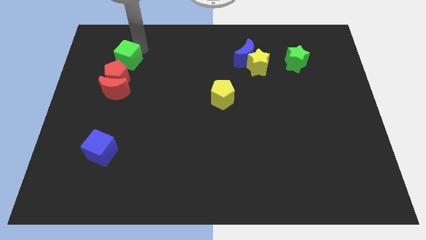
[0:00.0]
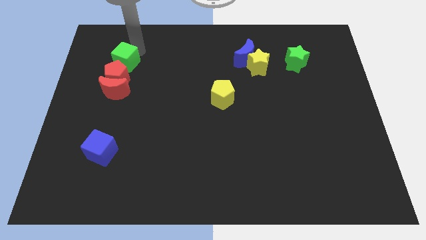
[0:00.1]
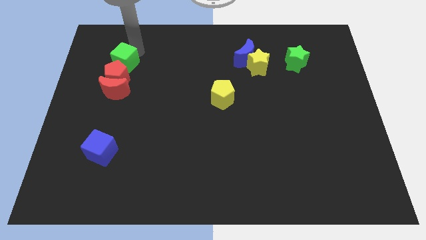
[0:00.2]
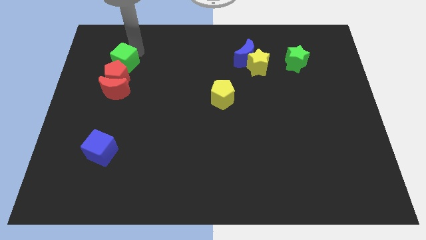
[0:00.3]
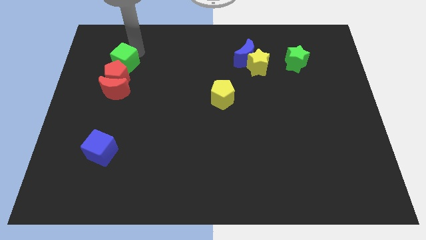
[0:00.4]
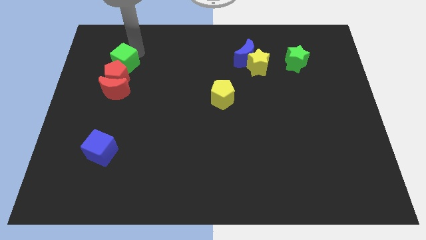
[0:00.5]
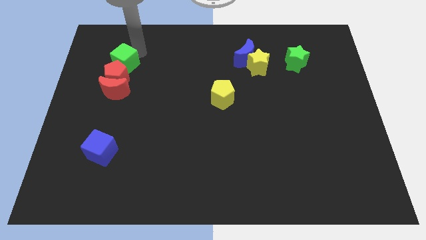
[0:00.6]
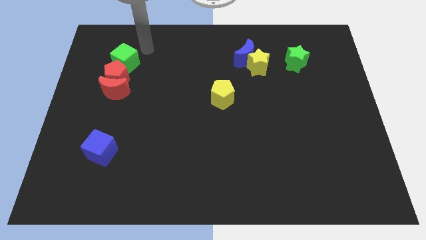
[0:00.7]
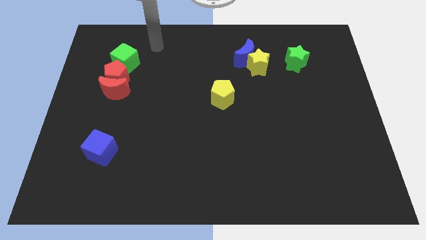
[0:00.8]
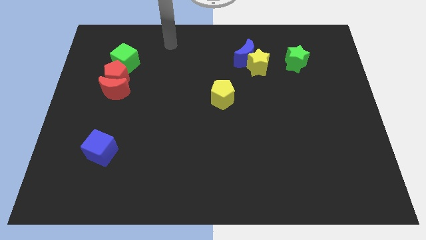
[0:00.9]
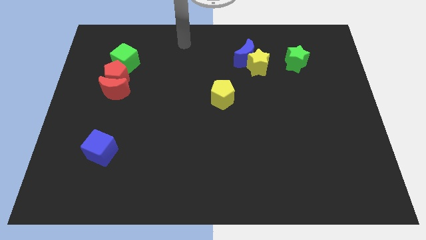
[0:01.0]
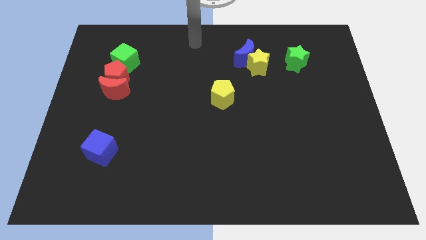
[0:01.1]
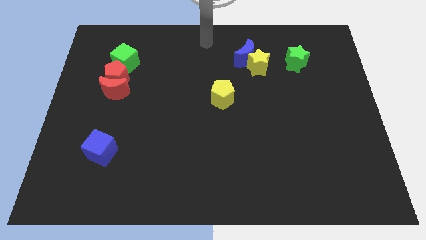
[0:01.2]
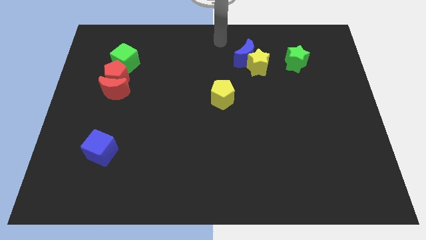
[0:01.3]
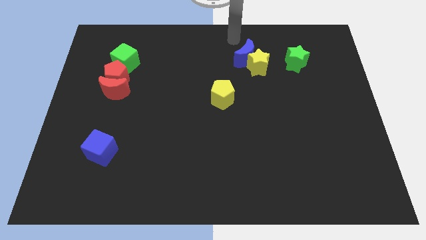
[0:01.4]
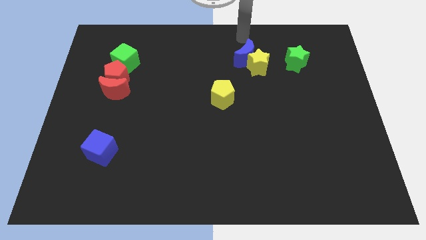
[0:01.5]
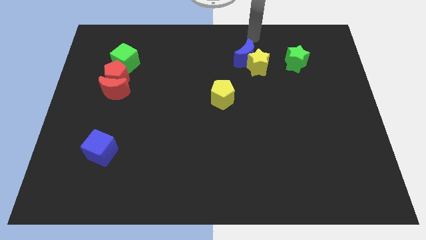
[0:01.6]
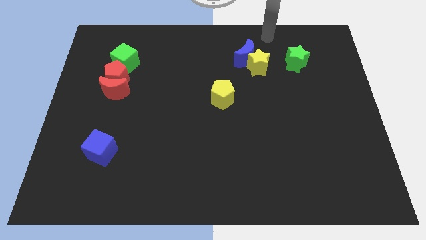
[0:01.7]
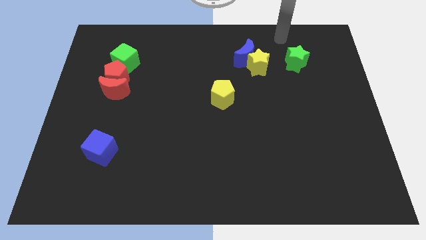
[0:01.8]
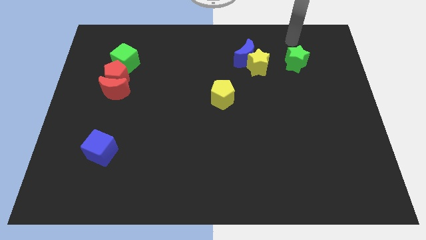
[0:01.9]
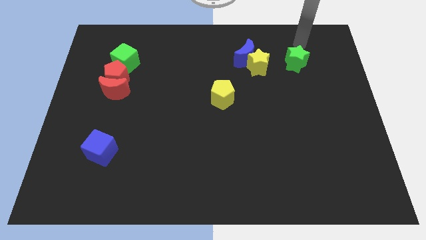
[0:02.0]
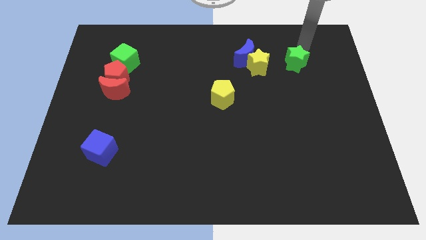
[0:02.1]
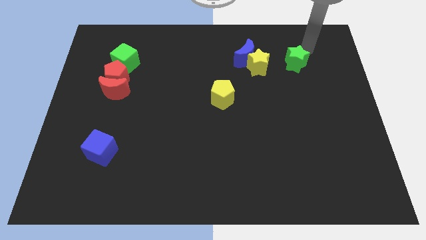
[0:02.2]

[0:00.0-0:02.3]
move your arm to the top of the green star

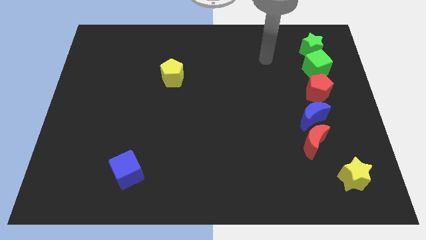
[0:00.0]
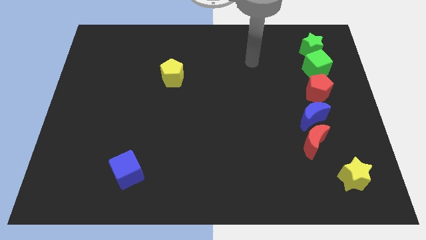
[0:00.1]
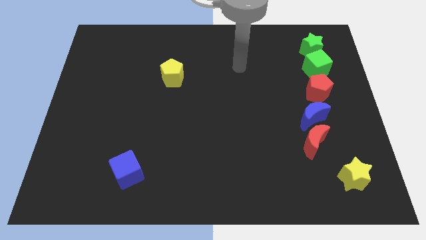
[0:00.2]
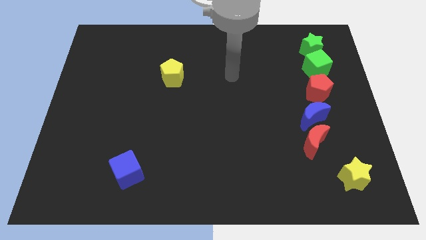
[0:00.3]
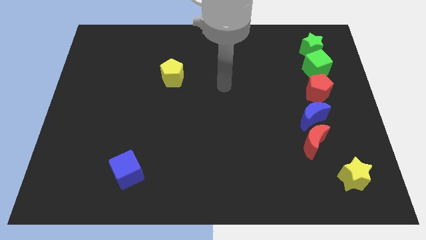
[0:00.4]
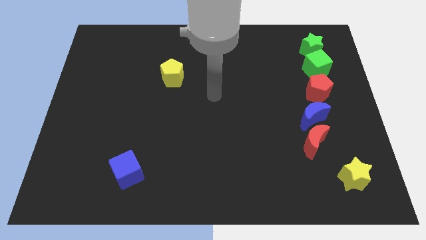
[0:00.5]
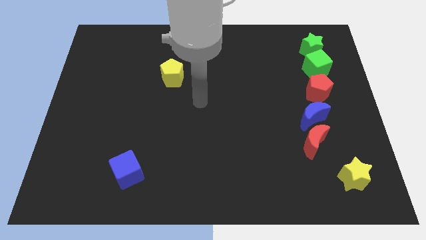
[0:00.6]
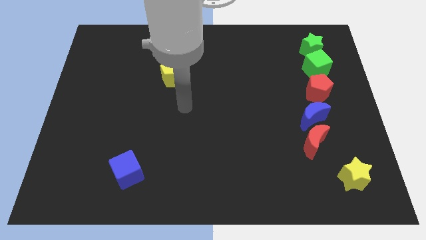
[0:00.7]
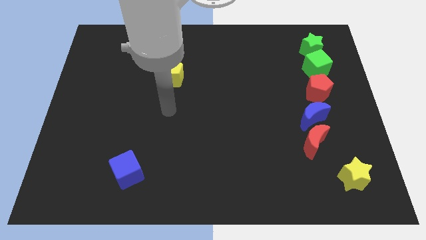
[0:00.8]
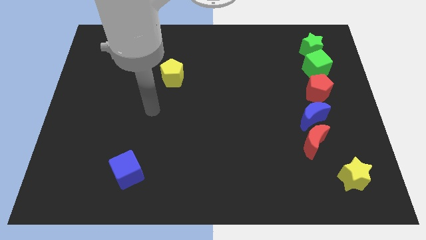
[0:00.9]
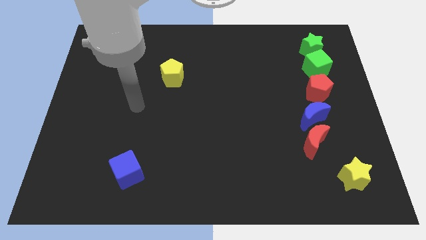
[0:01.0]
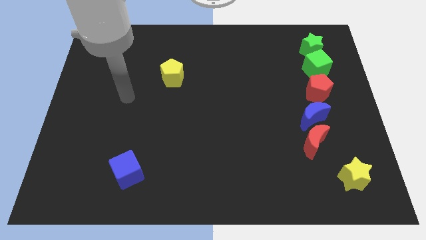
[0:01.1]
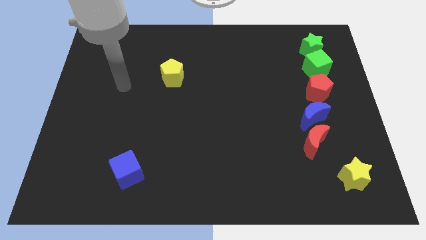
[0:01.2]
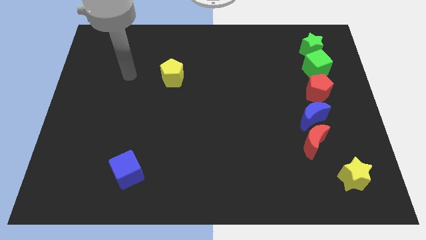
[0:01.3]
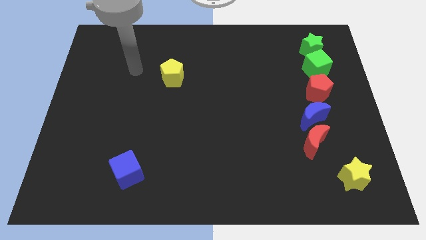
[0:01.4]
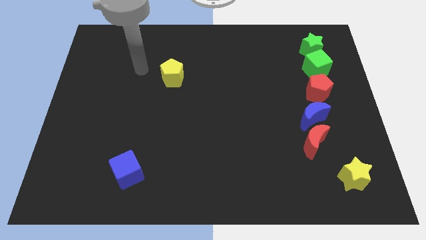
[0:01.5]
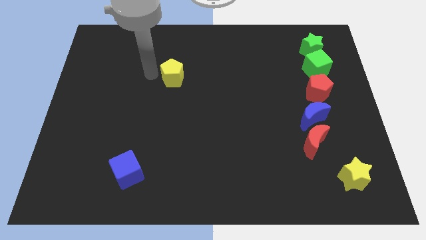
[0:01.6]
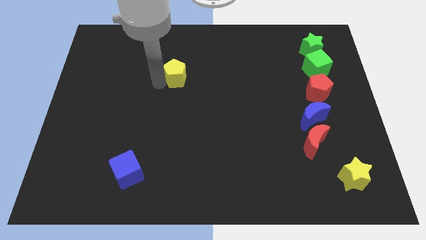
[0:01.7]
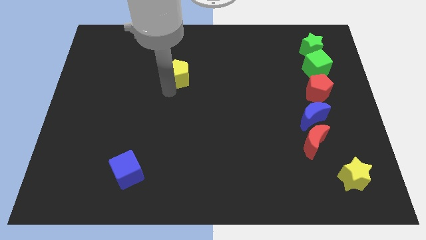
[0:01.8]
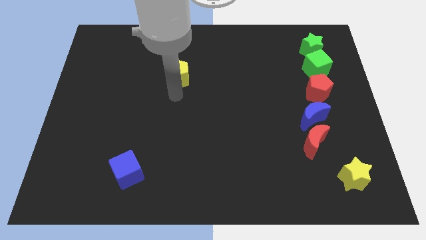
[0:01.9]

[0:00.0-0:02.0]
slightly push the yellow pentagon to the left of the board

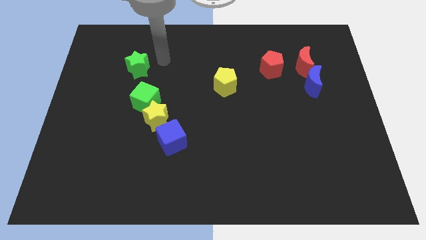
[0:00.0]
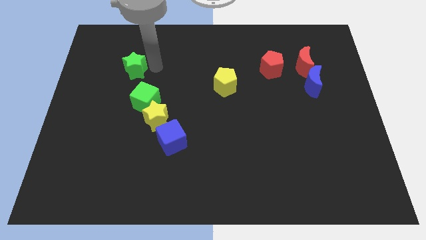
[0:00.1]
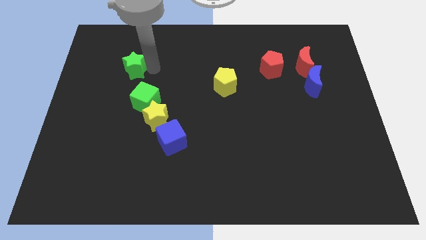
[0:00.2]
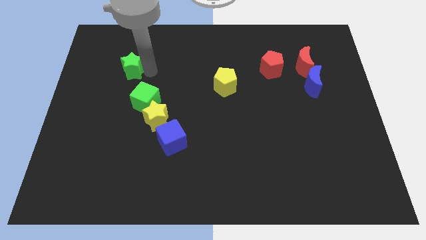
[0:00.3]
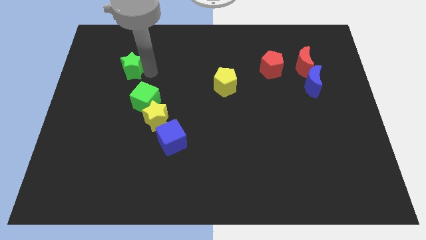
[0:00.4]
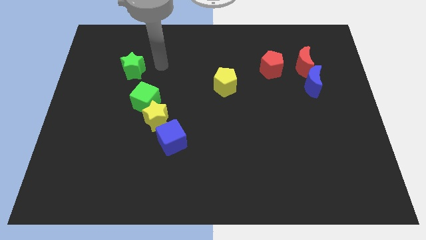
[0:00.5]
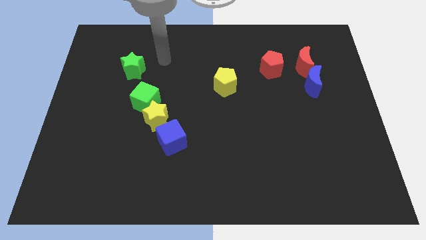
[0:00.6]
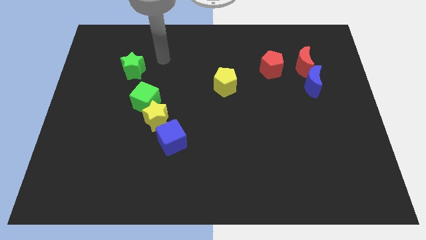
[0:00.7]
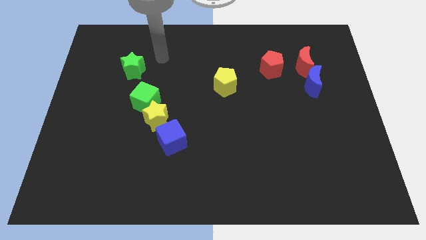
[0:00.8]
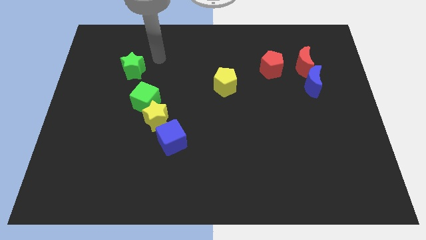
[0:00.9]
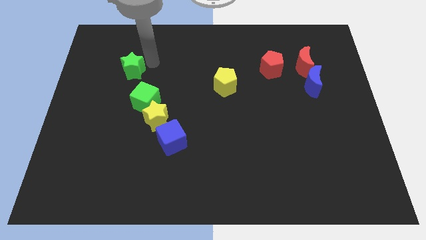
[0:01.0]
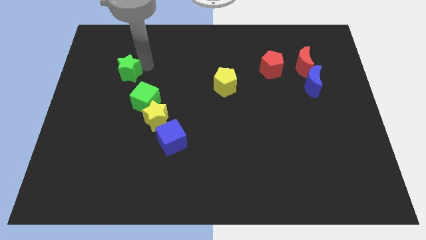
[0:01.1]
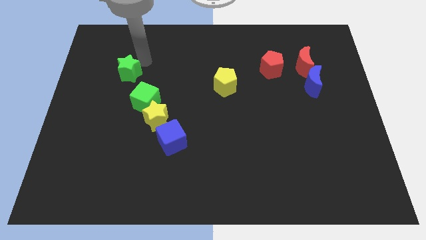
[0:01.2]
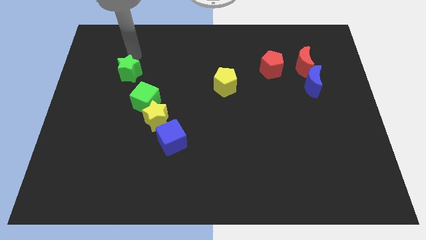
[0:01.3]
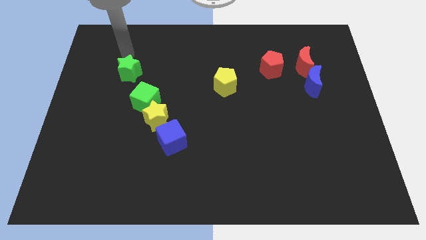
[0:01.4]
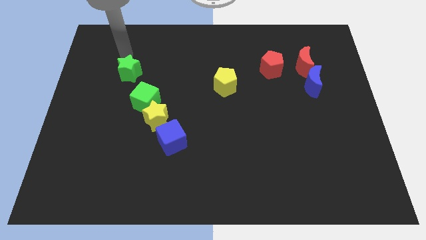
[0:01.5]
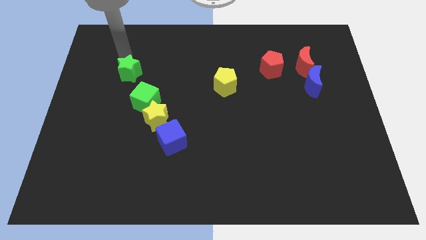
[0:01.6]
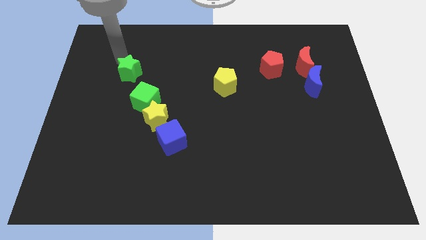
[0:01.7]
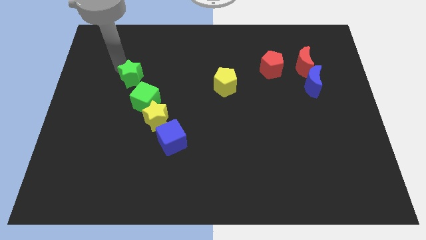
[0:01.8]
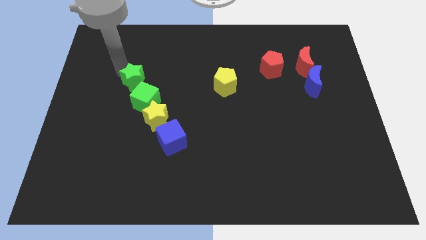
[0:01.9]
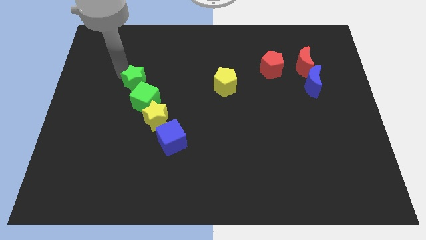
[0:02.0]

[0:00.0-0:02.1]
slide the green star to the top right of green cube

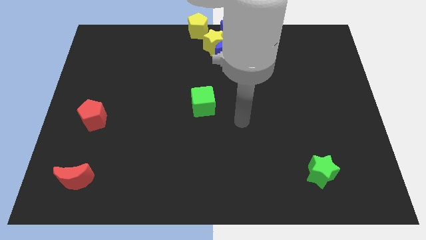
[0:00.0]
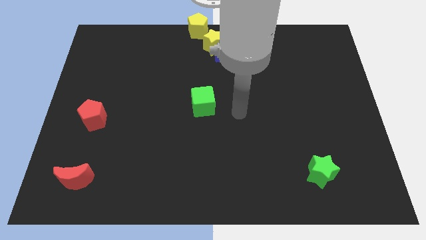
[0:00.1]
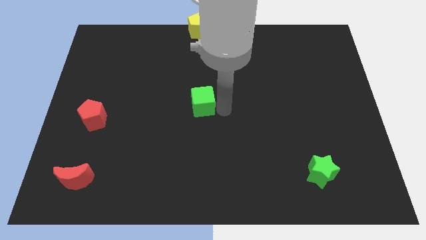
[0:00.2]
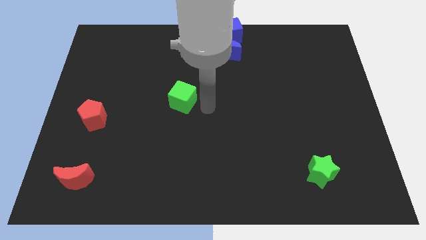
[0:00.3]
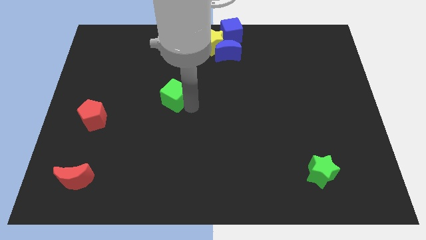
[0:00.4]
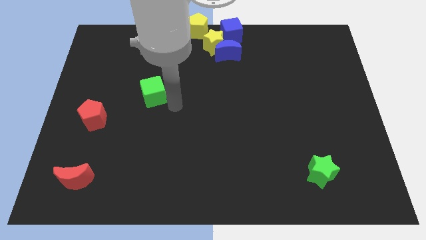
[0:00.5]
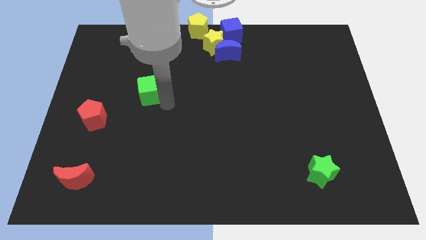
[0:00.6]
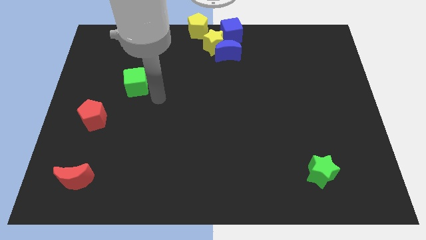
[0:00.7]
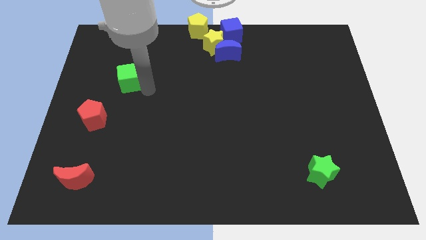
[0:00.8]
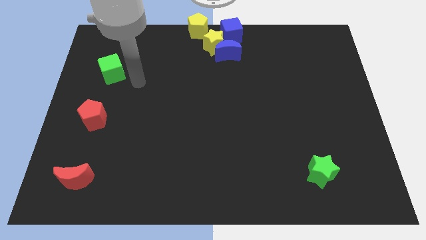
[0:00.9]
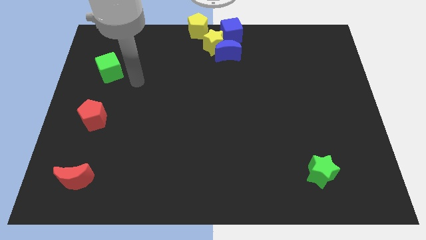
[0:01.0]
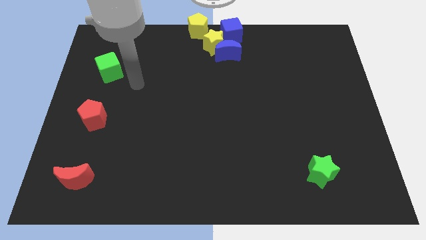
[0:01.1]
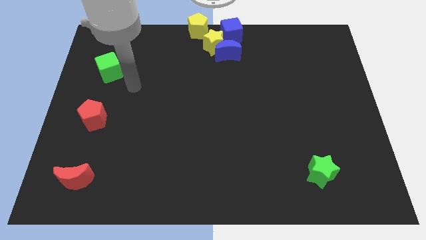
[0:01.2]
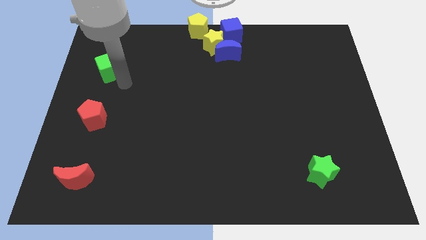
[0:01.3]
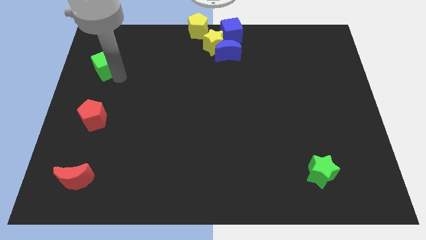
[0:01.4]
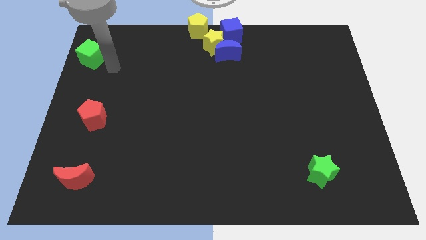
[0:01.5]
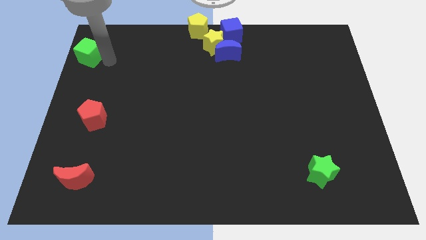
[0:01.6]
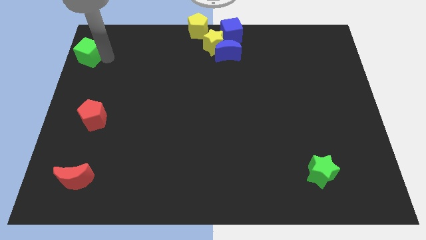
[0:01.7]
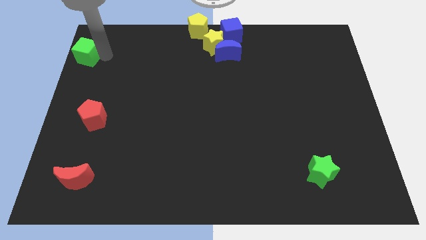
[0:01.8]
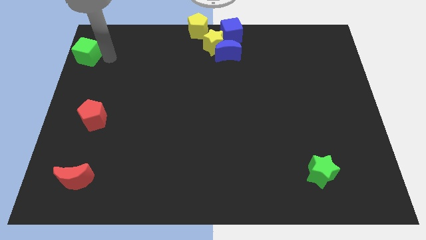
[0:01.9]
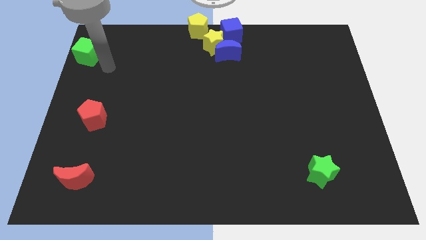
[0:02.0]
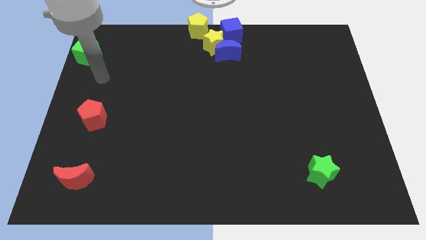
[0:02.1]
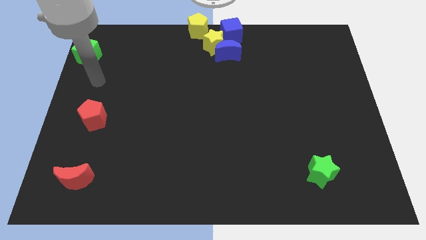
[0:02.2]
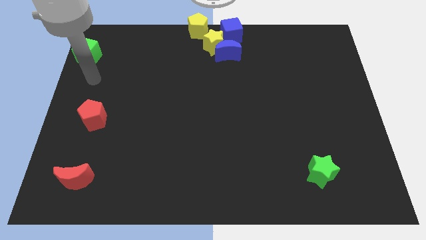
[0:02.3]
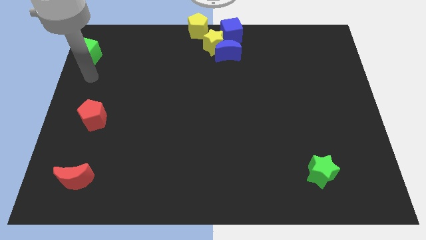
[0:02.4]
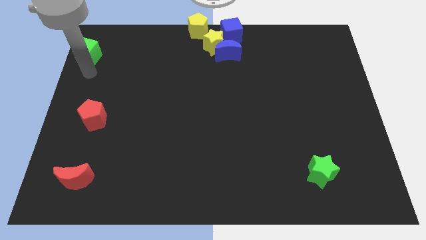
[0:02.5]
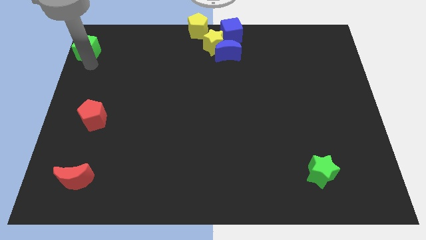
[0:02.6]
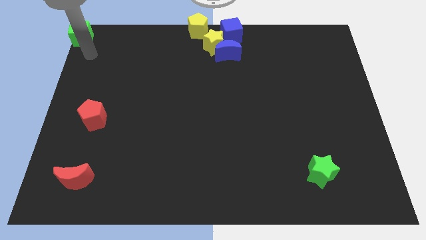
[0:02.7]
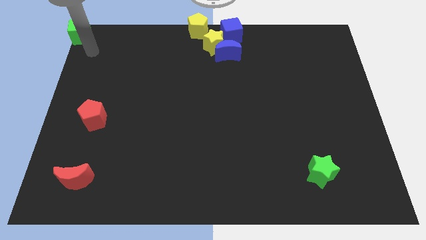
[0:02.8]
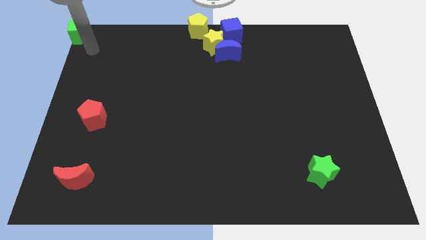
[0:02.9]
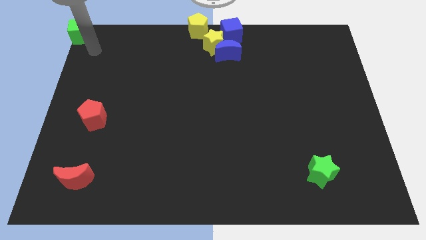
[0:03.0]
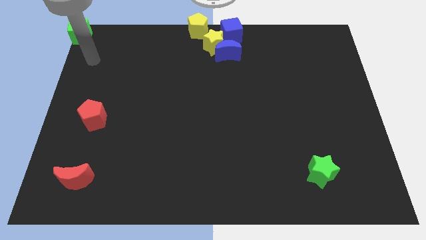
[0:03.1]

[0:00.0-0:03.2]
place green cube towards top left corner
